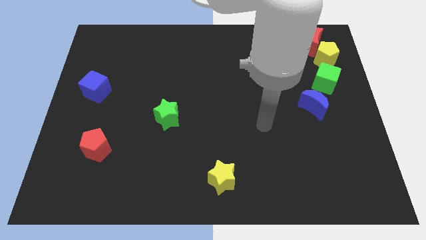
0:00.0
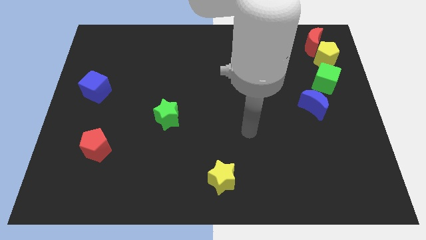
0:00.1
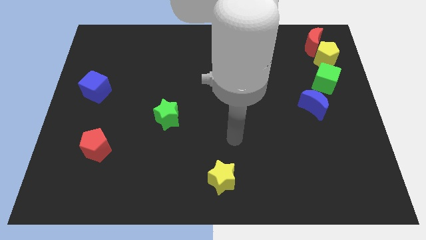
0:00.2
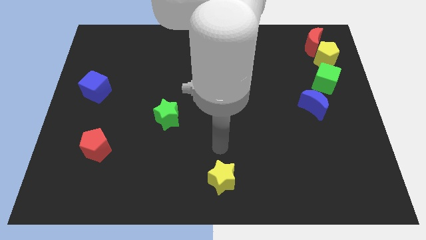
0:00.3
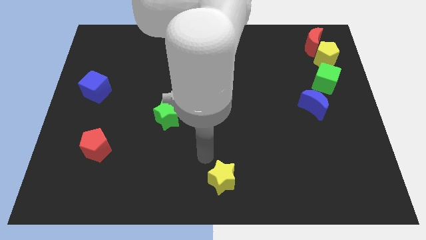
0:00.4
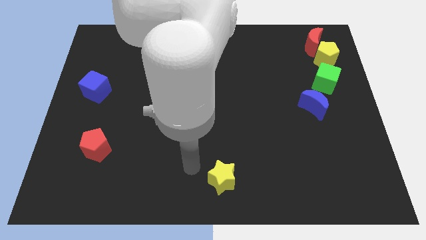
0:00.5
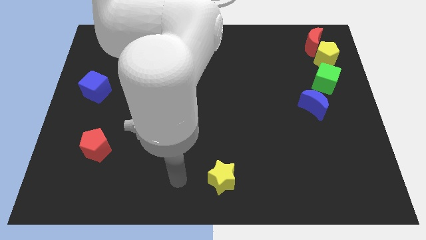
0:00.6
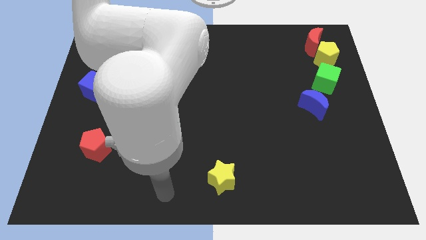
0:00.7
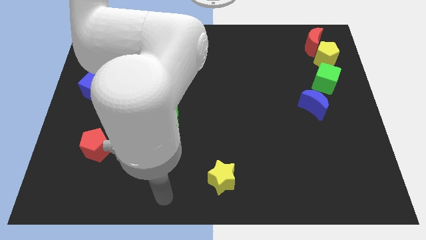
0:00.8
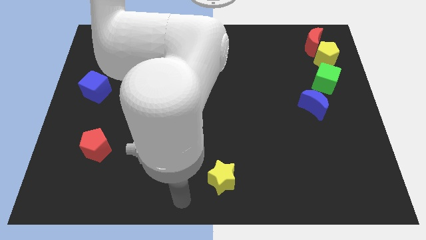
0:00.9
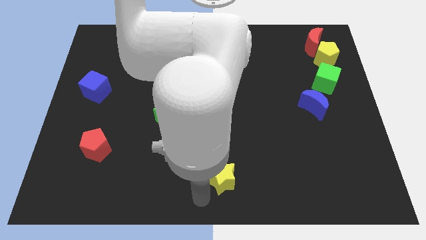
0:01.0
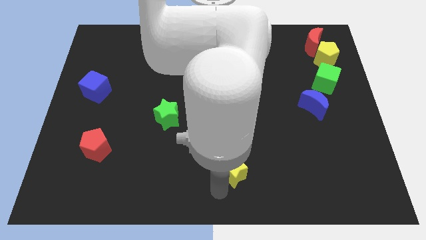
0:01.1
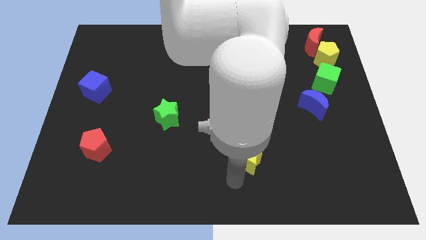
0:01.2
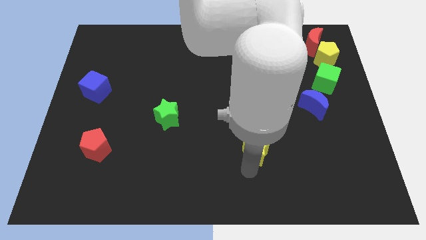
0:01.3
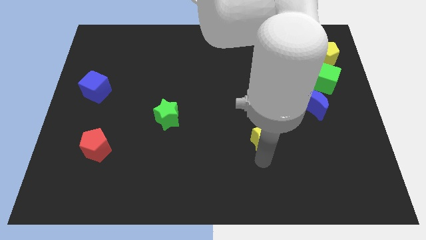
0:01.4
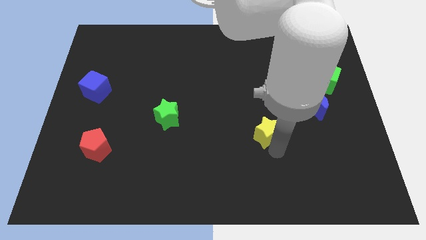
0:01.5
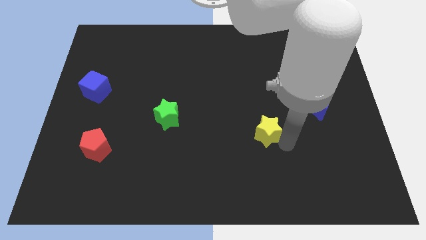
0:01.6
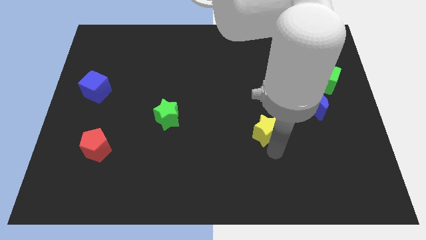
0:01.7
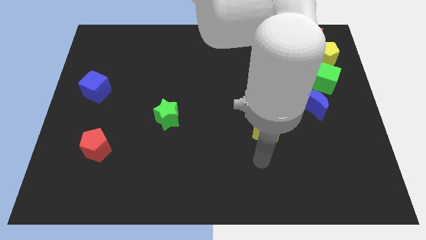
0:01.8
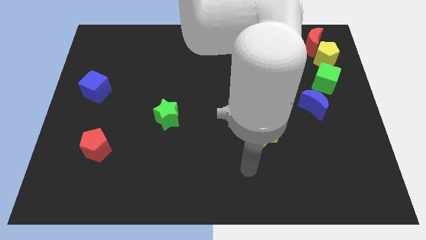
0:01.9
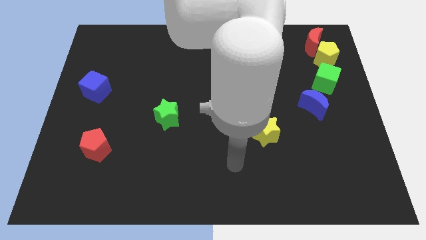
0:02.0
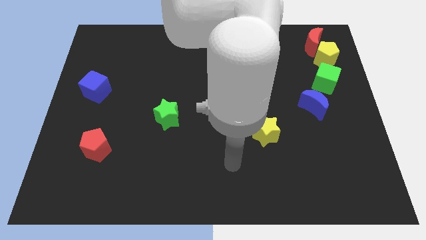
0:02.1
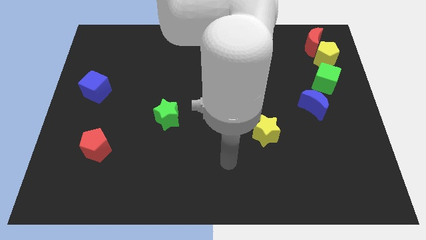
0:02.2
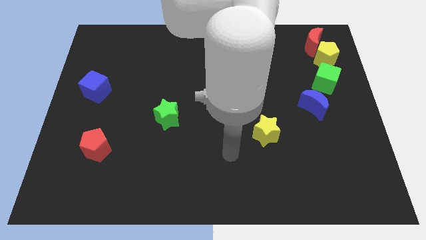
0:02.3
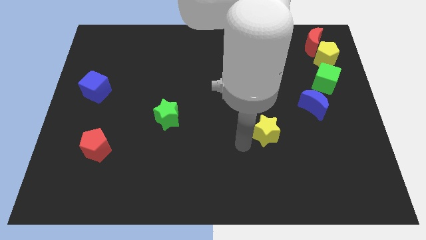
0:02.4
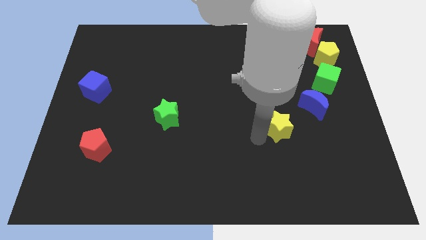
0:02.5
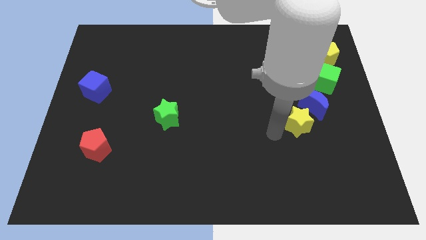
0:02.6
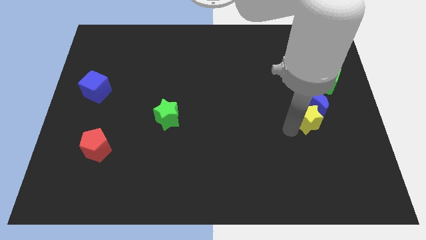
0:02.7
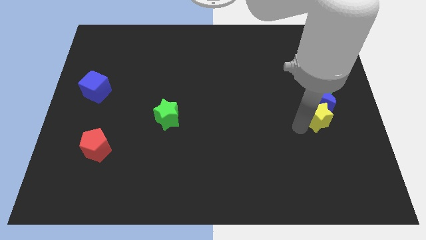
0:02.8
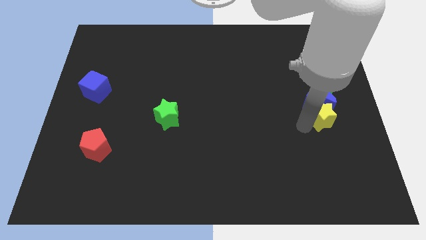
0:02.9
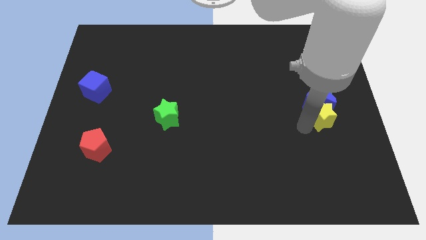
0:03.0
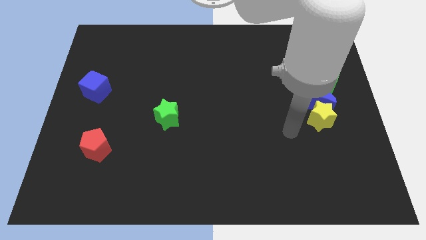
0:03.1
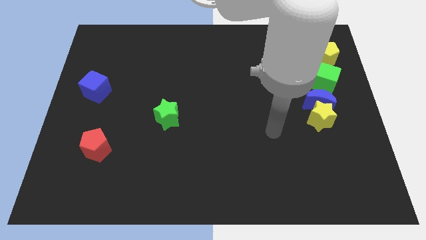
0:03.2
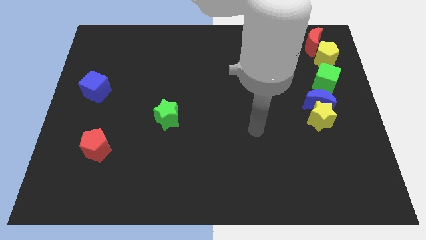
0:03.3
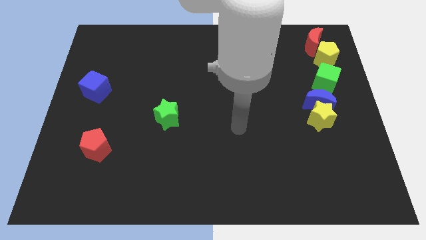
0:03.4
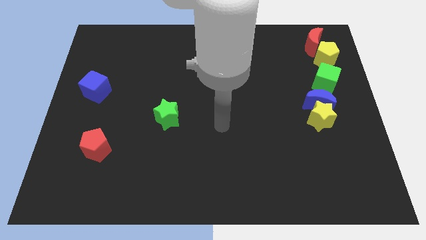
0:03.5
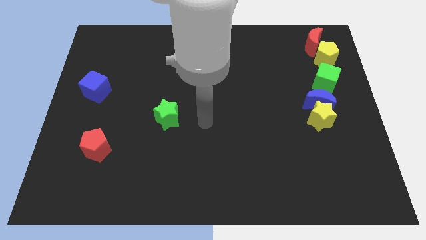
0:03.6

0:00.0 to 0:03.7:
push the yellow star below the blue crescent

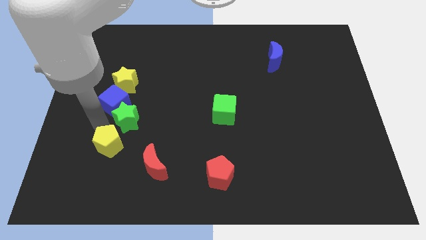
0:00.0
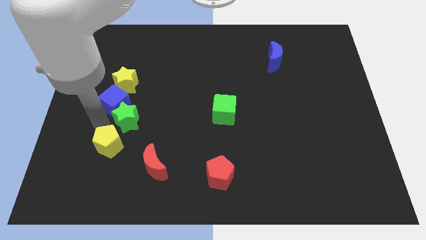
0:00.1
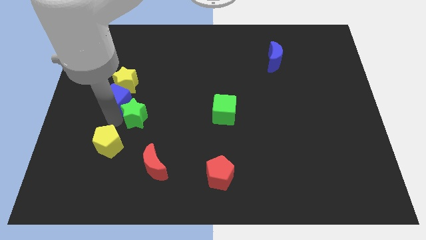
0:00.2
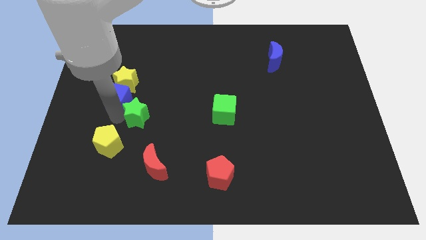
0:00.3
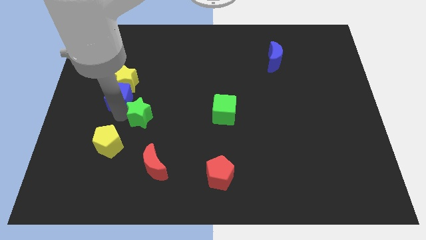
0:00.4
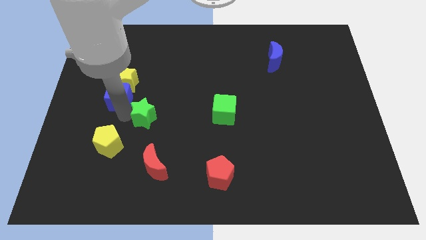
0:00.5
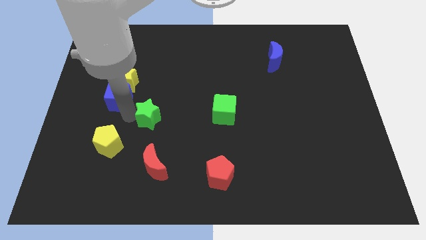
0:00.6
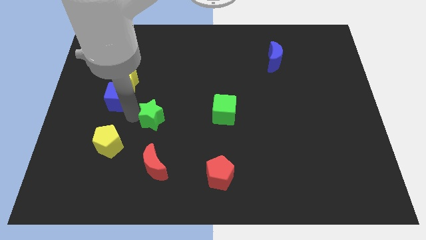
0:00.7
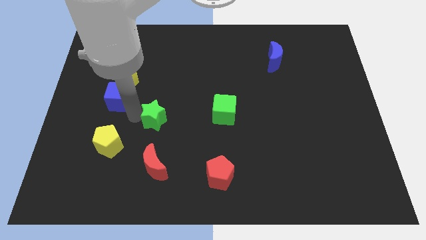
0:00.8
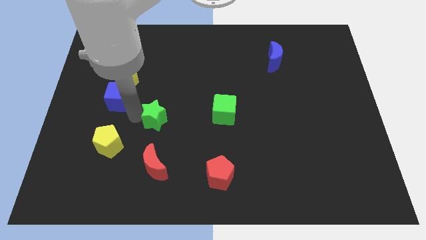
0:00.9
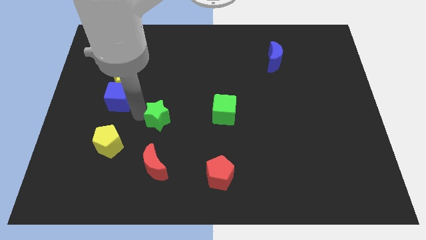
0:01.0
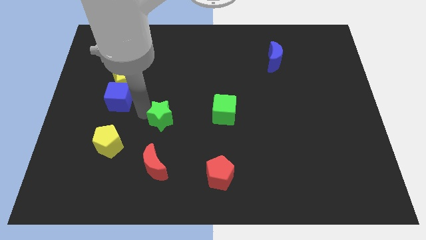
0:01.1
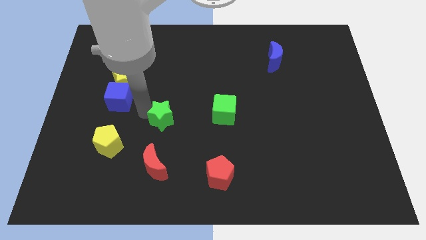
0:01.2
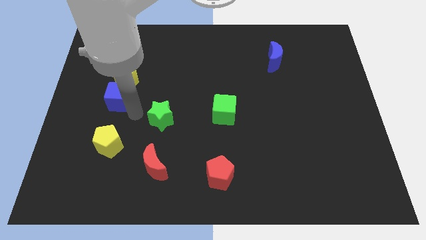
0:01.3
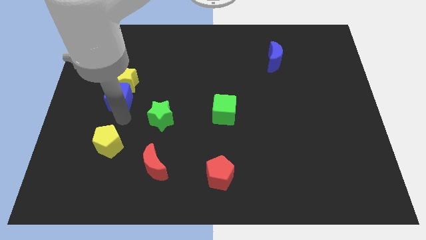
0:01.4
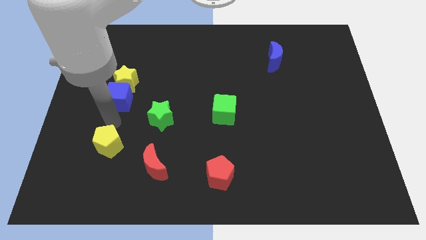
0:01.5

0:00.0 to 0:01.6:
push the green star towards the right side slightly

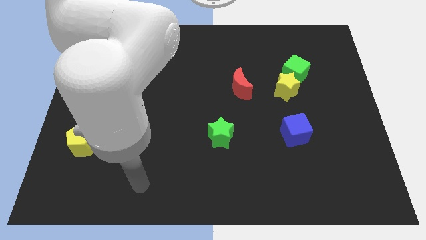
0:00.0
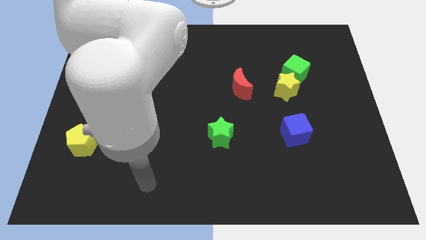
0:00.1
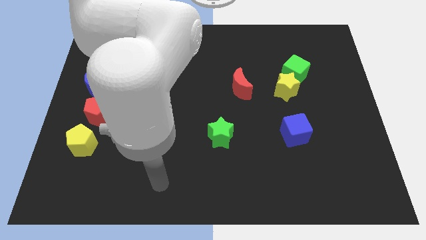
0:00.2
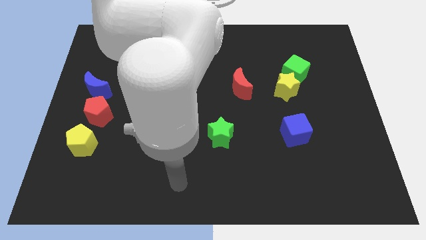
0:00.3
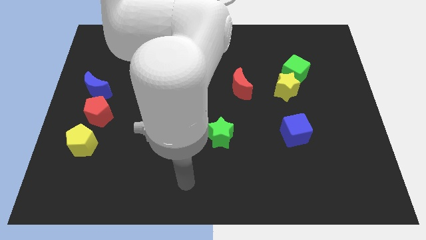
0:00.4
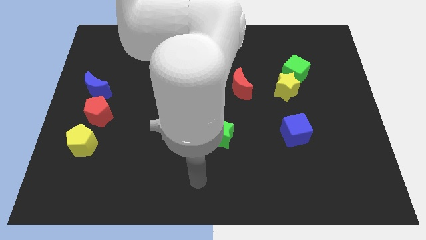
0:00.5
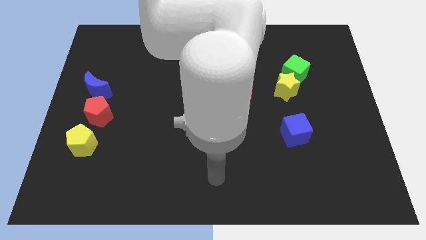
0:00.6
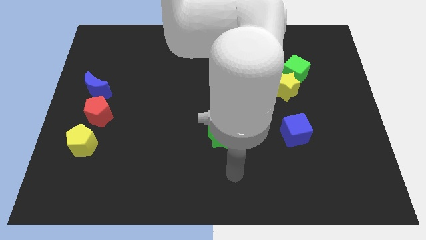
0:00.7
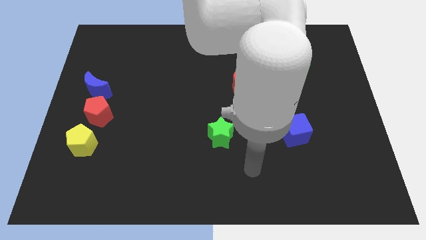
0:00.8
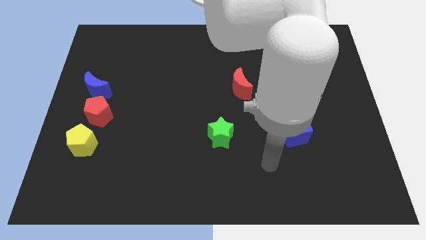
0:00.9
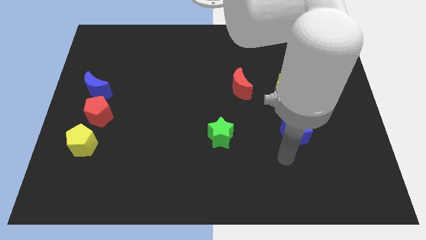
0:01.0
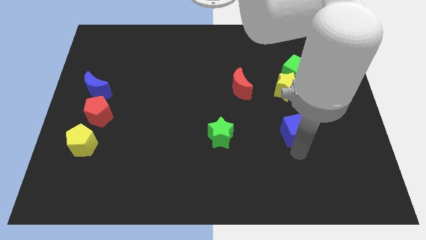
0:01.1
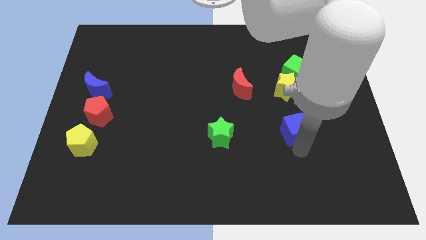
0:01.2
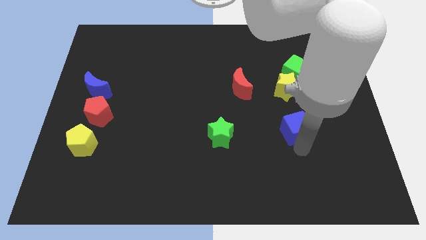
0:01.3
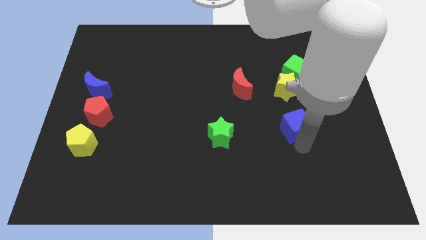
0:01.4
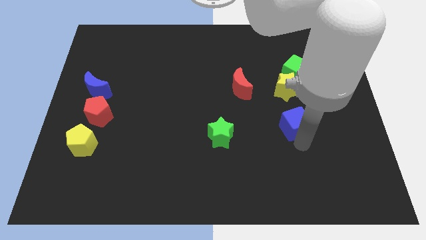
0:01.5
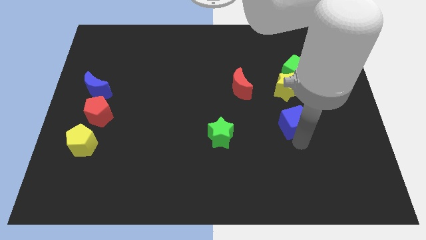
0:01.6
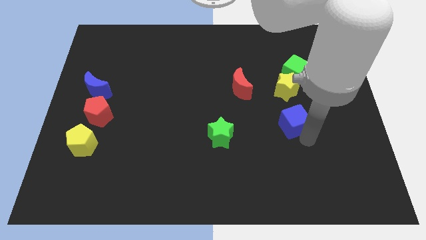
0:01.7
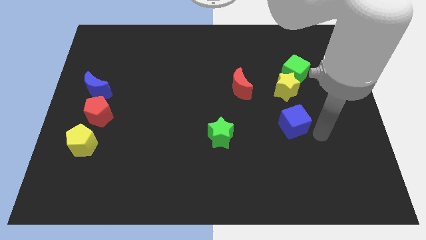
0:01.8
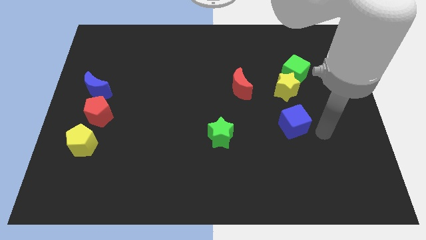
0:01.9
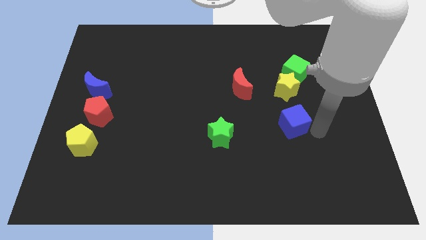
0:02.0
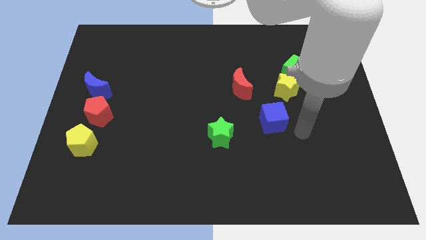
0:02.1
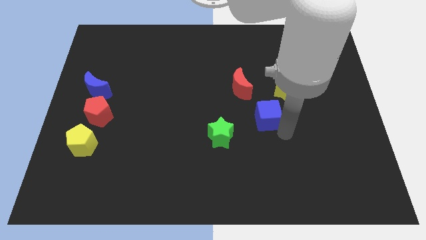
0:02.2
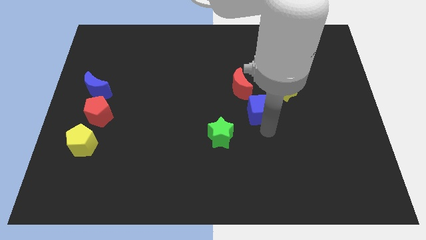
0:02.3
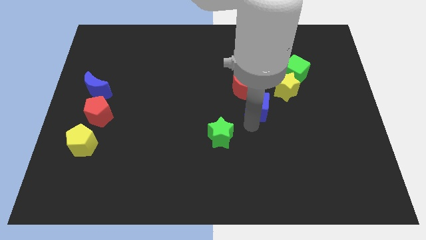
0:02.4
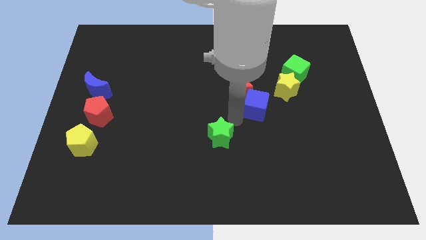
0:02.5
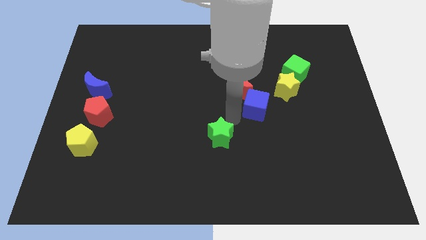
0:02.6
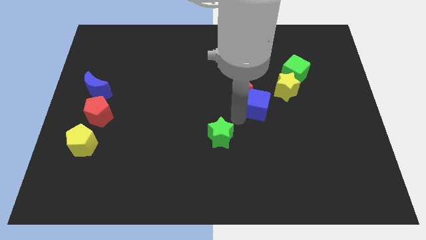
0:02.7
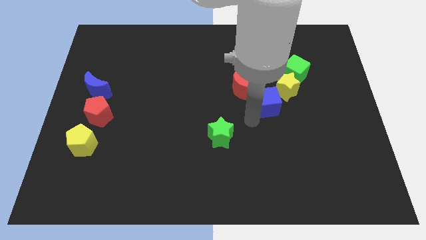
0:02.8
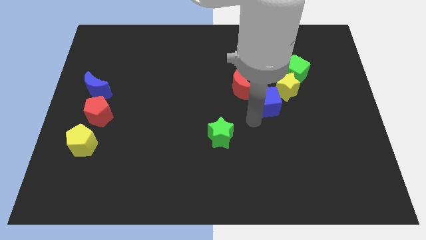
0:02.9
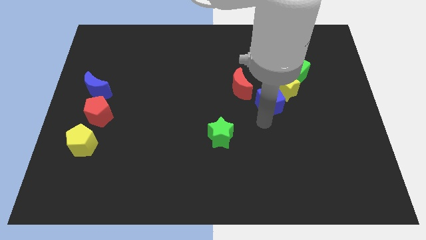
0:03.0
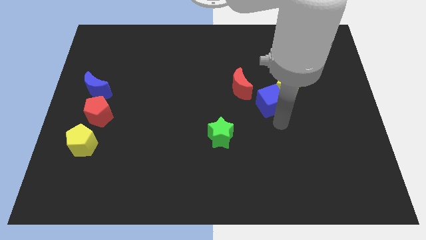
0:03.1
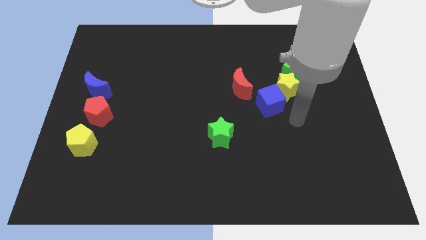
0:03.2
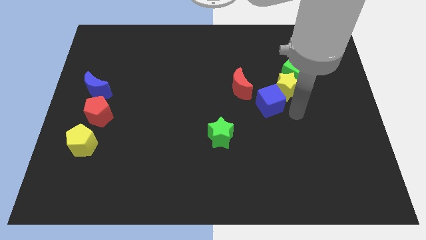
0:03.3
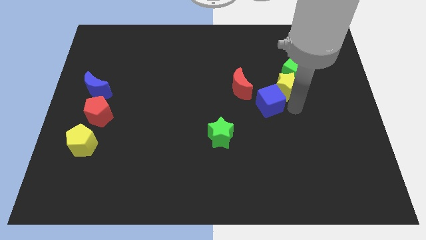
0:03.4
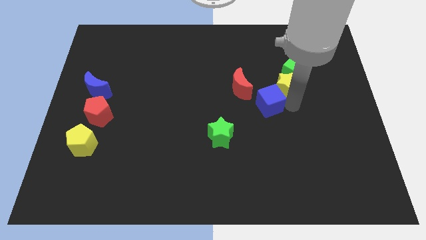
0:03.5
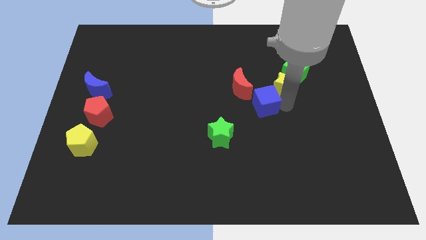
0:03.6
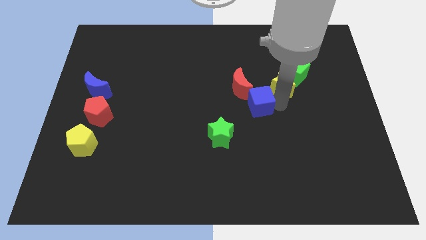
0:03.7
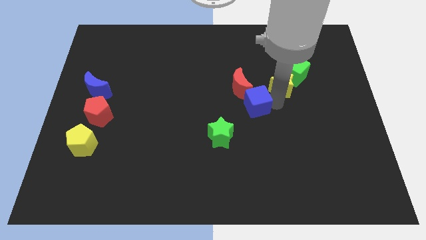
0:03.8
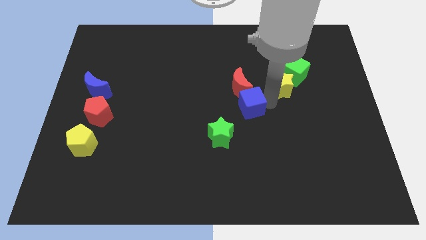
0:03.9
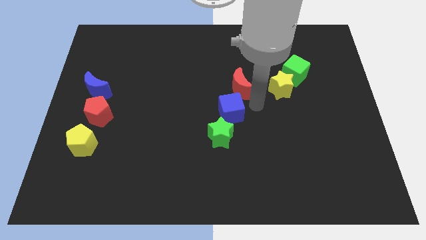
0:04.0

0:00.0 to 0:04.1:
put the blue cube vertically below the red moon
